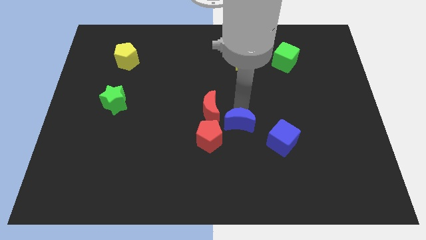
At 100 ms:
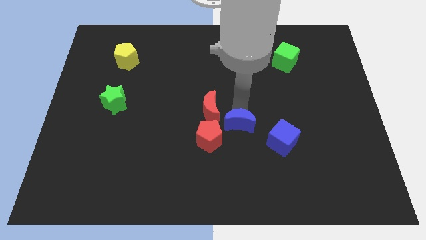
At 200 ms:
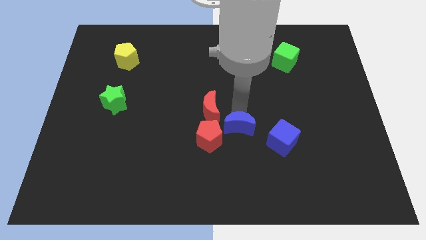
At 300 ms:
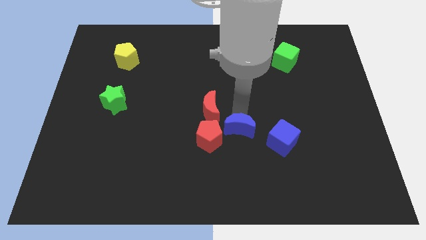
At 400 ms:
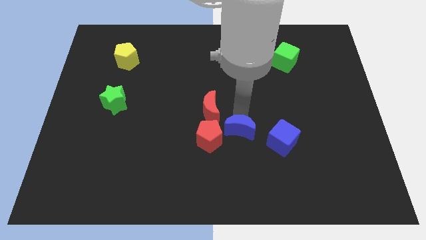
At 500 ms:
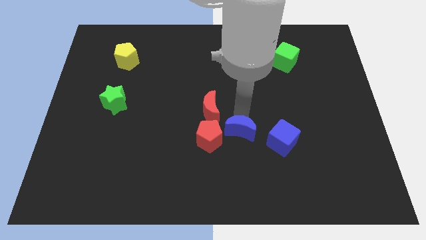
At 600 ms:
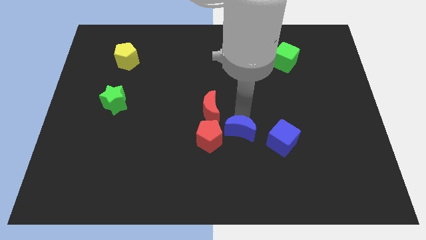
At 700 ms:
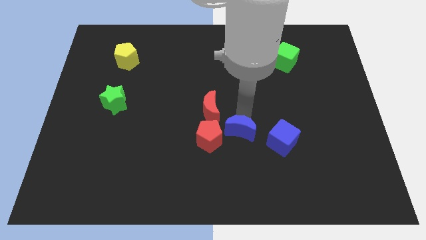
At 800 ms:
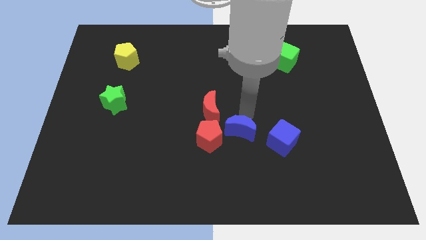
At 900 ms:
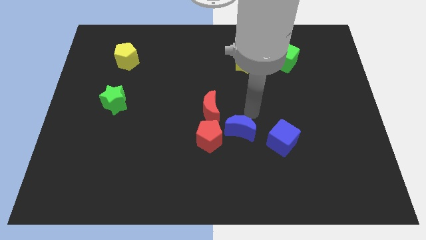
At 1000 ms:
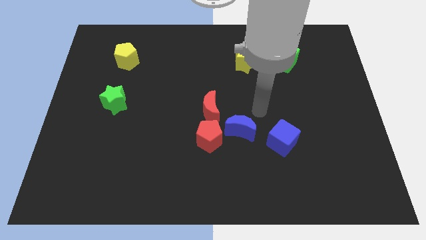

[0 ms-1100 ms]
push blue moon to the bottom

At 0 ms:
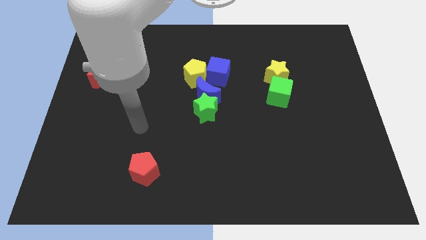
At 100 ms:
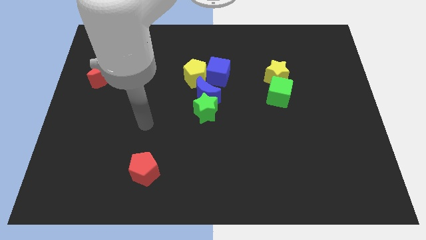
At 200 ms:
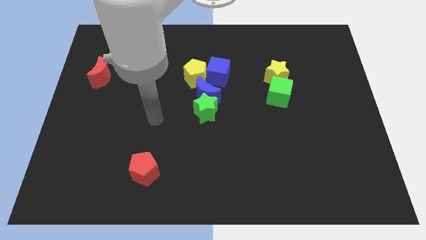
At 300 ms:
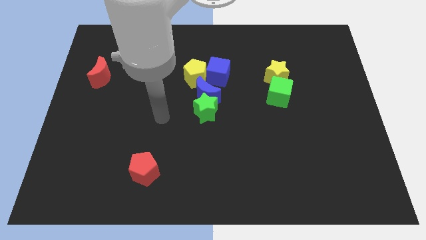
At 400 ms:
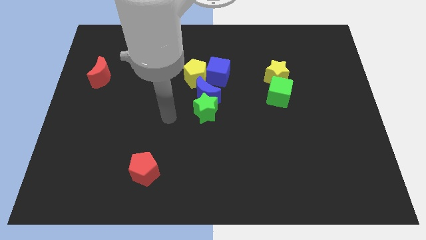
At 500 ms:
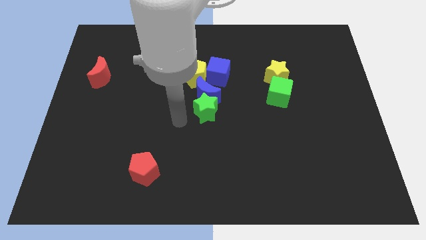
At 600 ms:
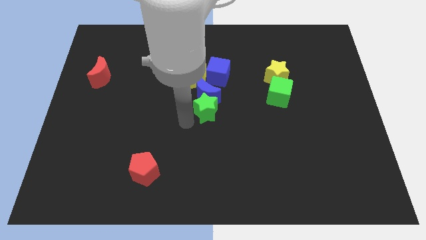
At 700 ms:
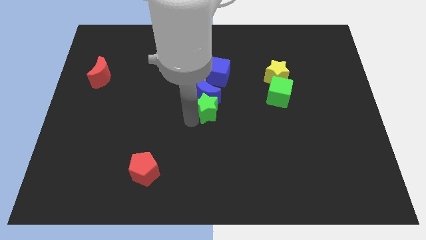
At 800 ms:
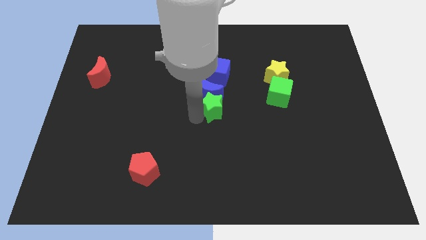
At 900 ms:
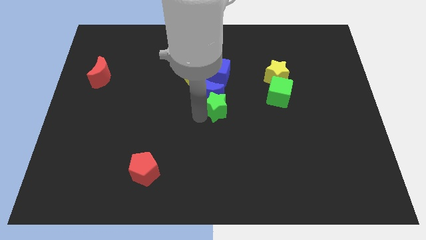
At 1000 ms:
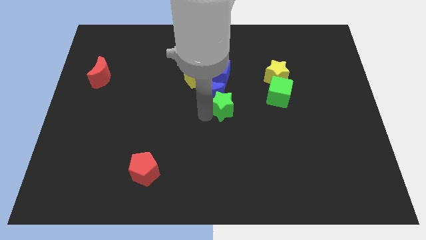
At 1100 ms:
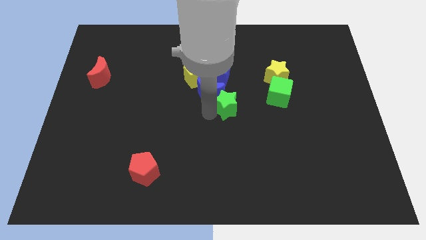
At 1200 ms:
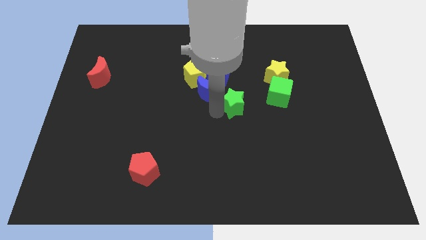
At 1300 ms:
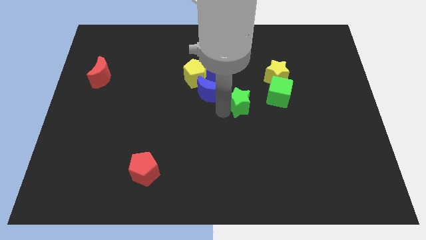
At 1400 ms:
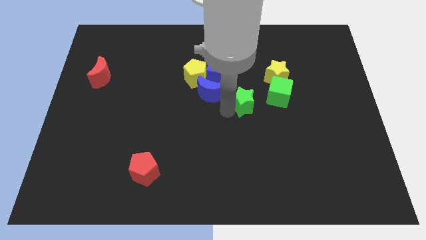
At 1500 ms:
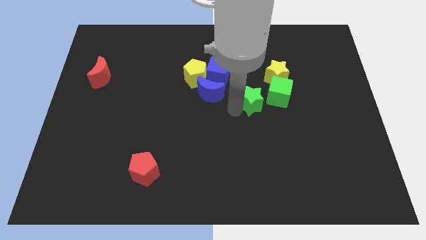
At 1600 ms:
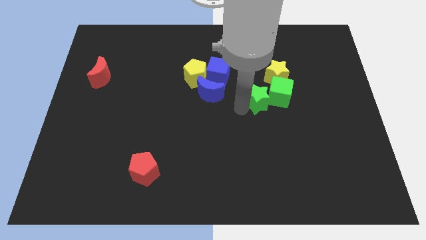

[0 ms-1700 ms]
move the green star into the green cube

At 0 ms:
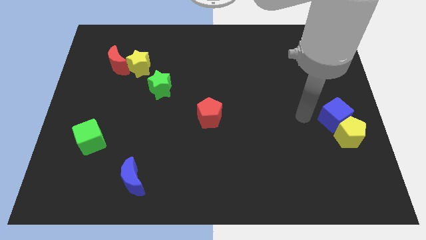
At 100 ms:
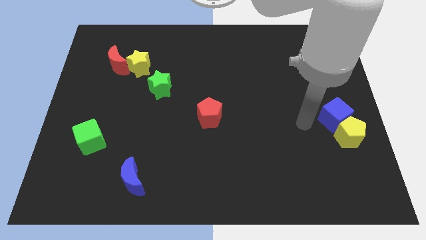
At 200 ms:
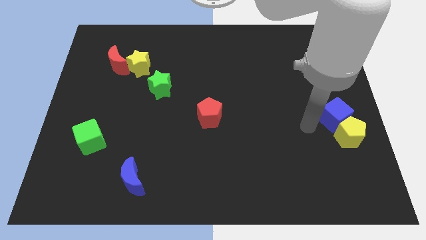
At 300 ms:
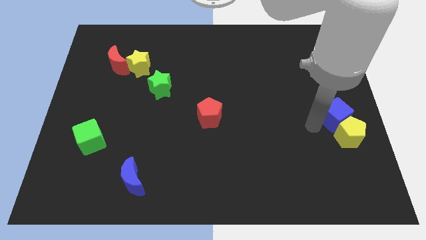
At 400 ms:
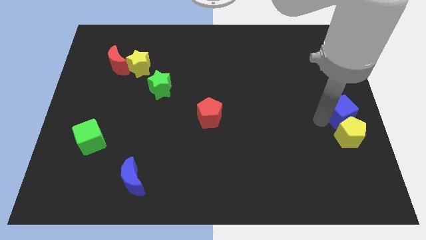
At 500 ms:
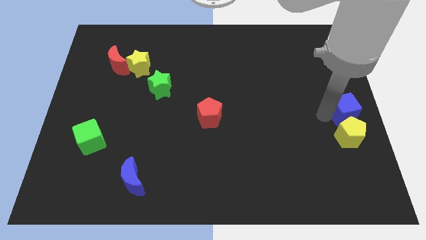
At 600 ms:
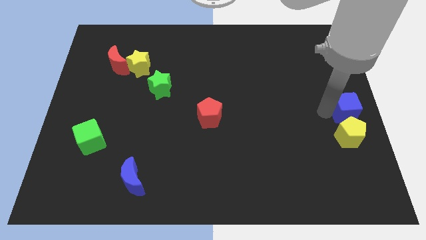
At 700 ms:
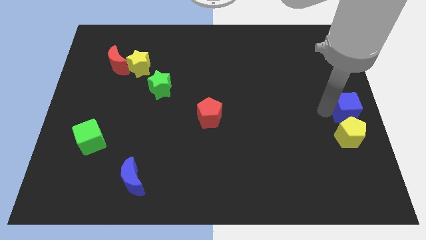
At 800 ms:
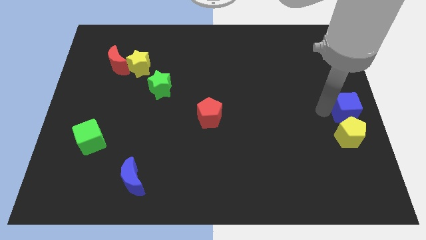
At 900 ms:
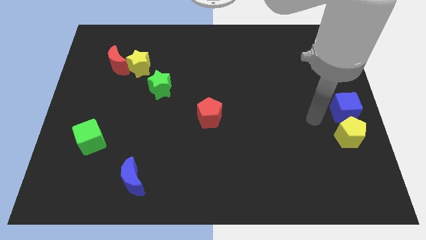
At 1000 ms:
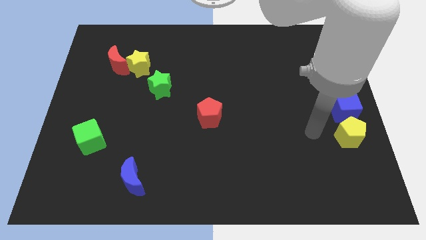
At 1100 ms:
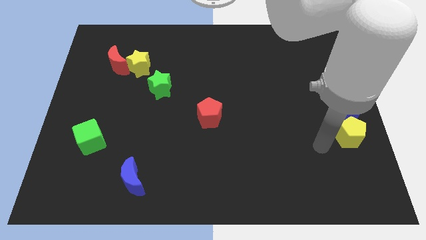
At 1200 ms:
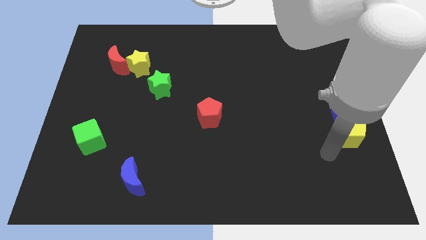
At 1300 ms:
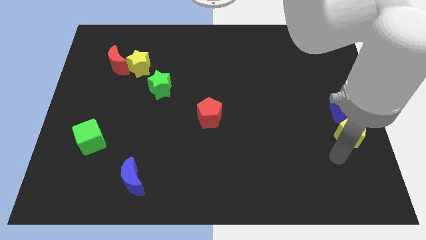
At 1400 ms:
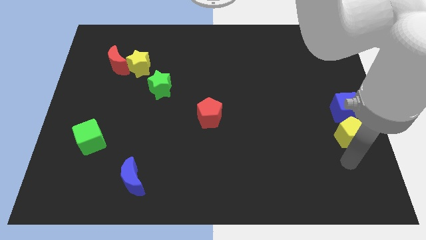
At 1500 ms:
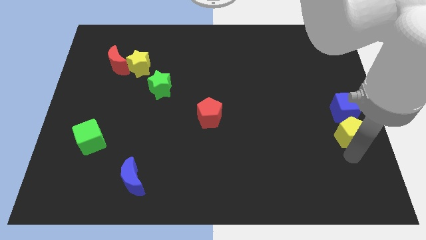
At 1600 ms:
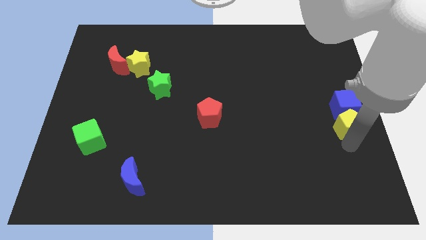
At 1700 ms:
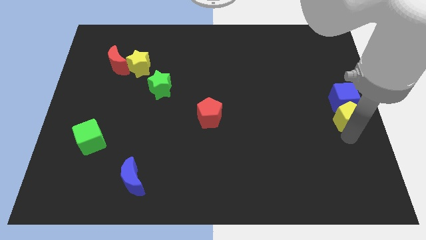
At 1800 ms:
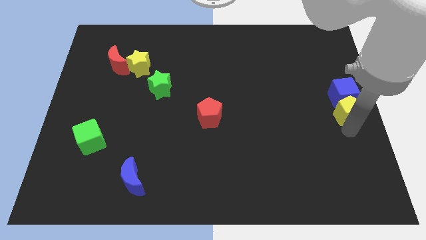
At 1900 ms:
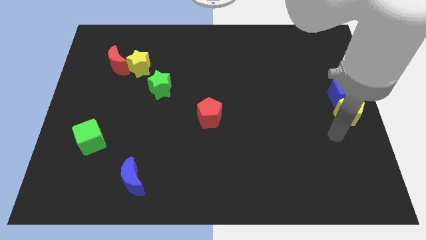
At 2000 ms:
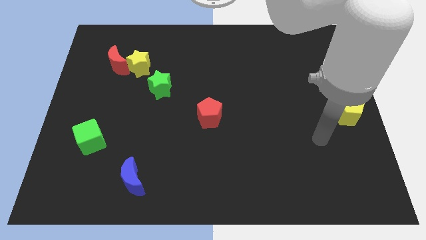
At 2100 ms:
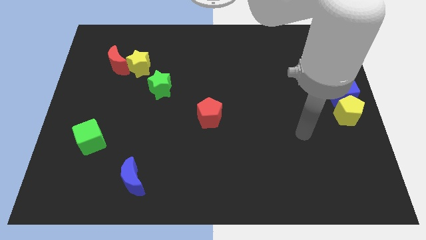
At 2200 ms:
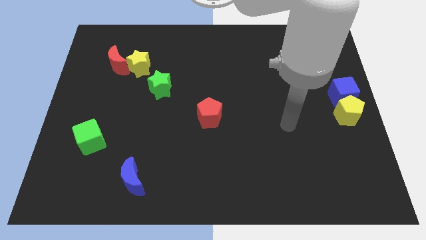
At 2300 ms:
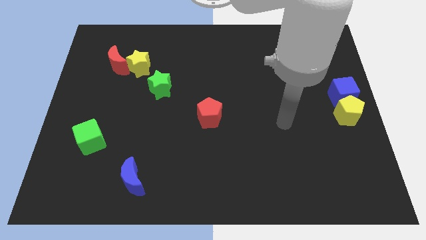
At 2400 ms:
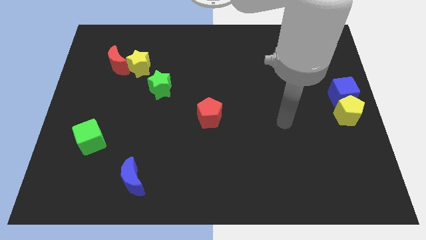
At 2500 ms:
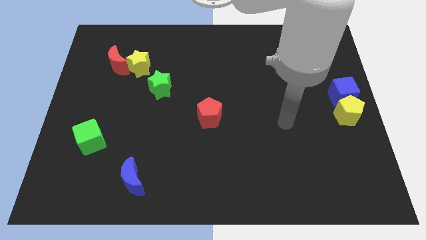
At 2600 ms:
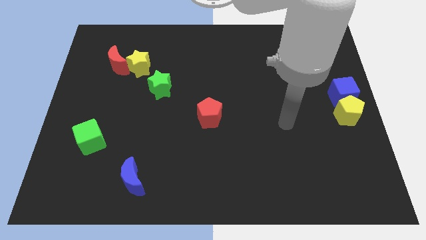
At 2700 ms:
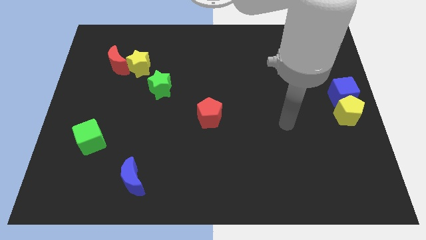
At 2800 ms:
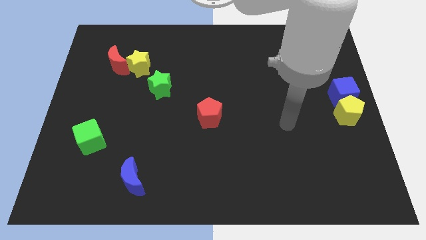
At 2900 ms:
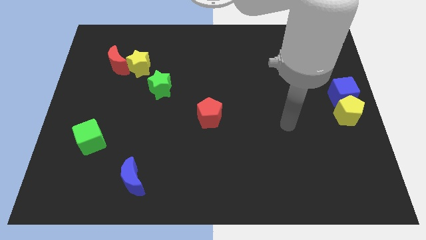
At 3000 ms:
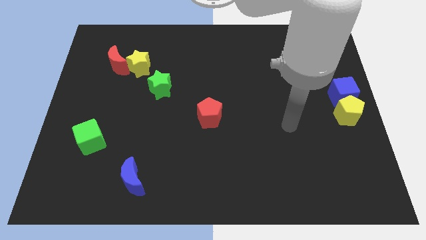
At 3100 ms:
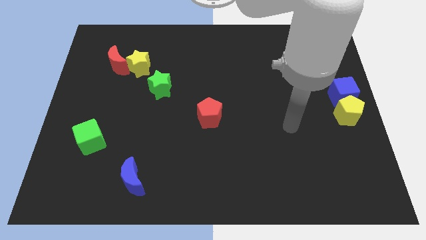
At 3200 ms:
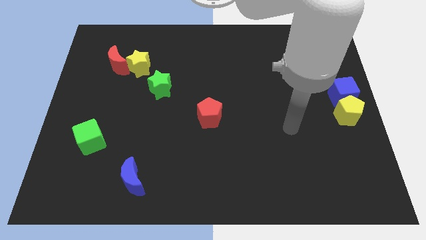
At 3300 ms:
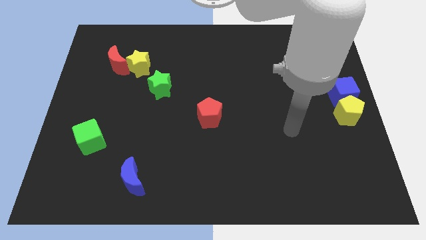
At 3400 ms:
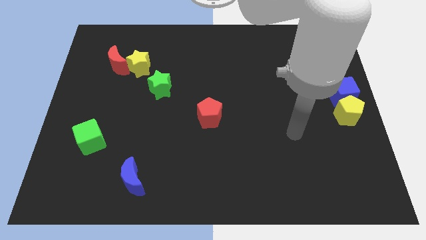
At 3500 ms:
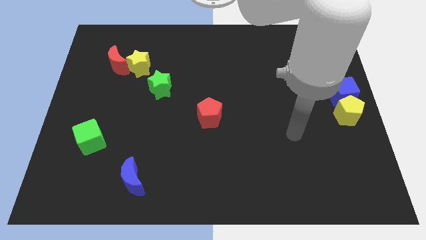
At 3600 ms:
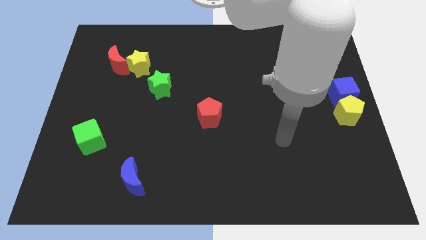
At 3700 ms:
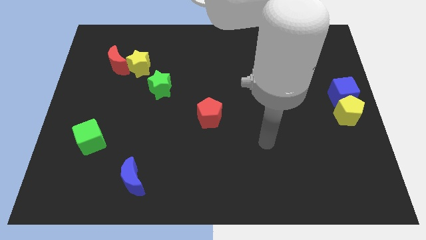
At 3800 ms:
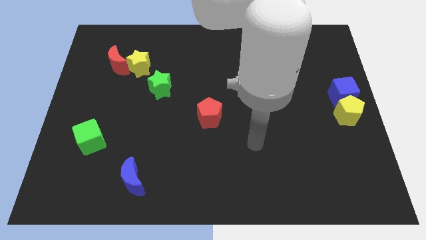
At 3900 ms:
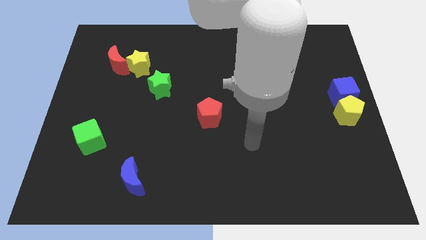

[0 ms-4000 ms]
place the yellow pentagon and blue cube at the middle right of the board

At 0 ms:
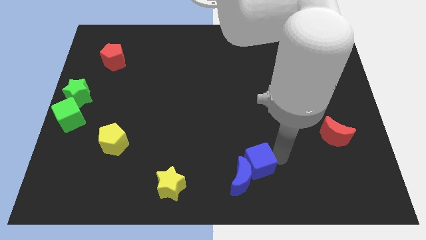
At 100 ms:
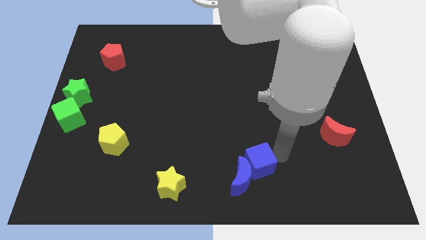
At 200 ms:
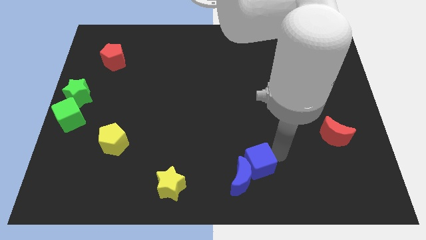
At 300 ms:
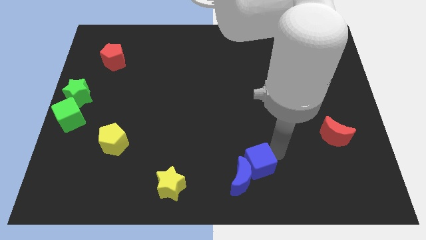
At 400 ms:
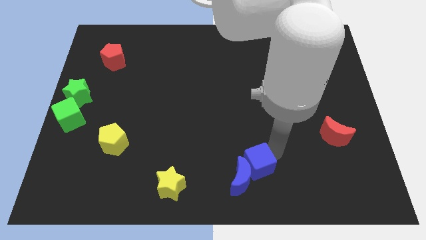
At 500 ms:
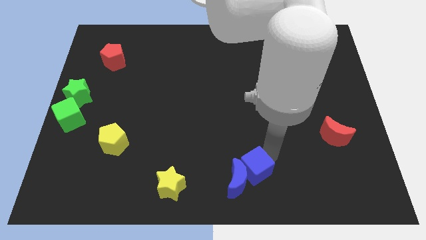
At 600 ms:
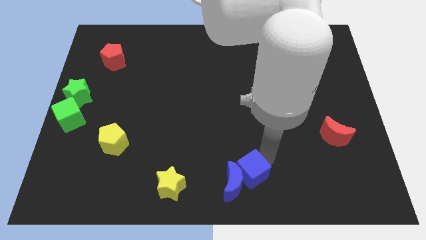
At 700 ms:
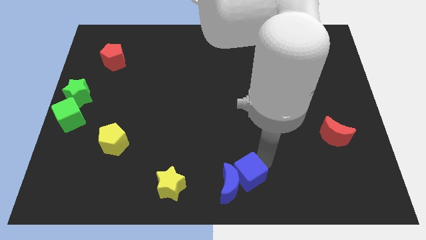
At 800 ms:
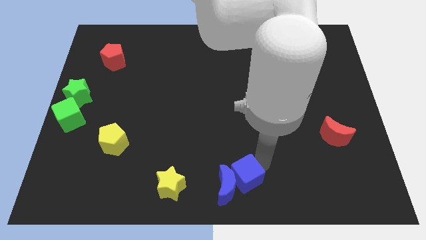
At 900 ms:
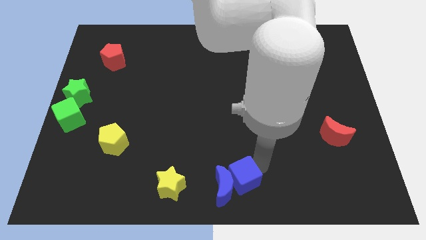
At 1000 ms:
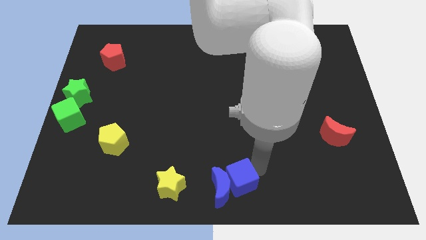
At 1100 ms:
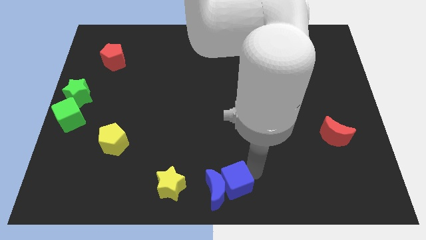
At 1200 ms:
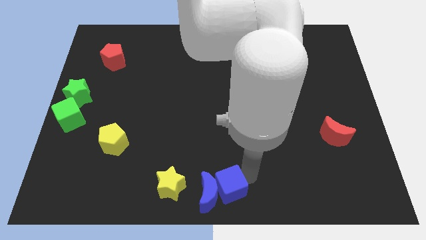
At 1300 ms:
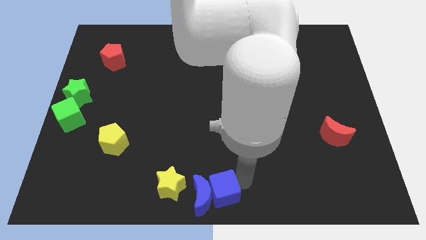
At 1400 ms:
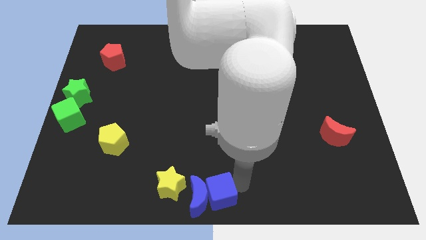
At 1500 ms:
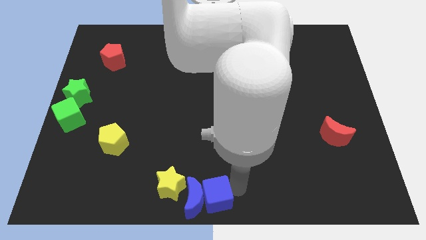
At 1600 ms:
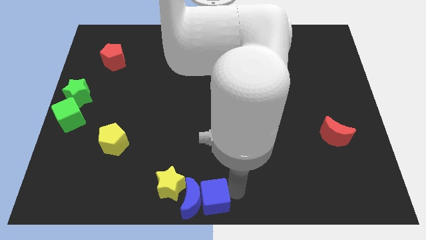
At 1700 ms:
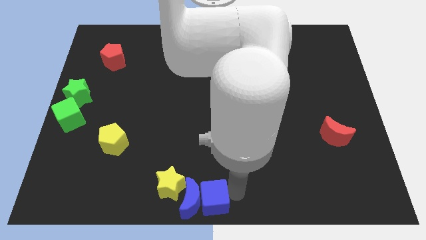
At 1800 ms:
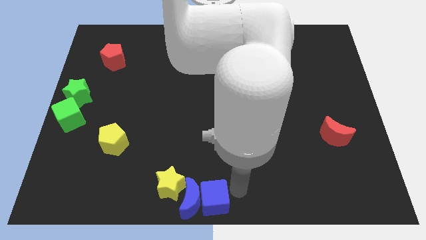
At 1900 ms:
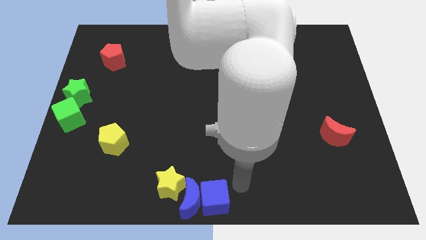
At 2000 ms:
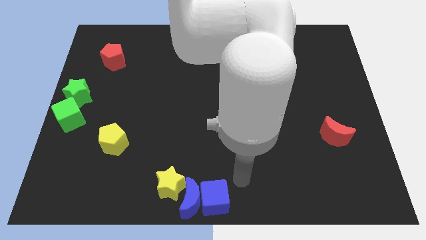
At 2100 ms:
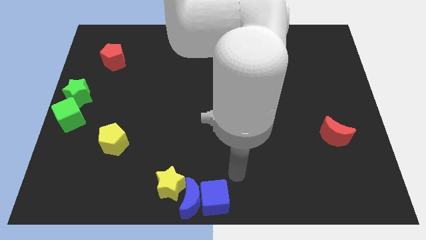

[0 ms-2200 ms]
put the blue cube and the blue moon at the bottom center of the board

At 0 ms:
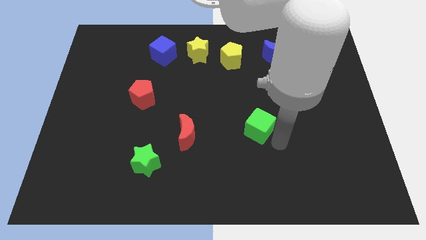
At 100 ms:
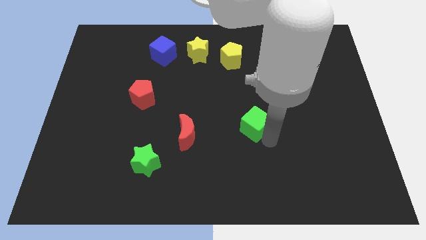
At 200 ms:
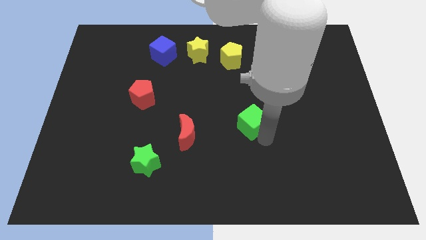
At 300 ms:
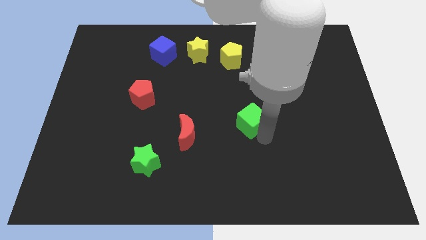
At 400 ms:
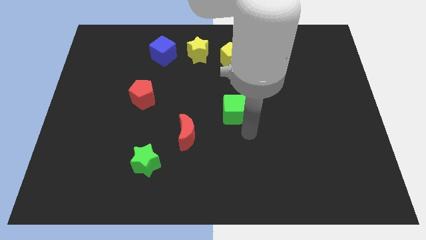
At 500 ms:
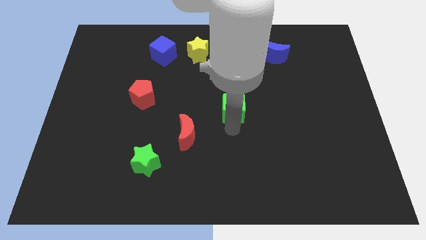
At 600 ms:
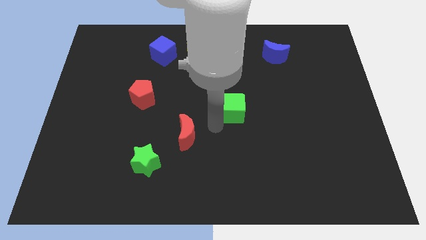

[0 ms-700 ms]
place green cube below yellow pentagon
